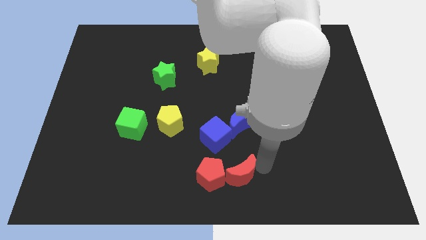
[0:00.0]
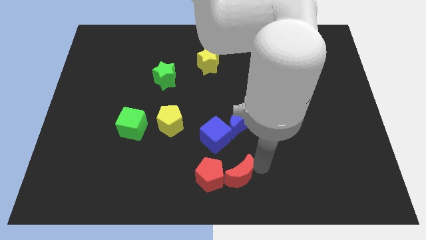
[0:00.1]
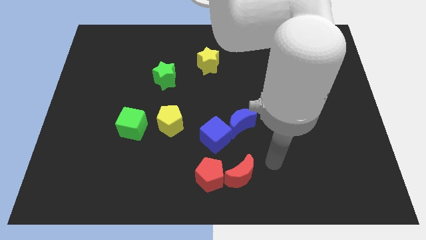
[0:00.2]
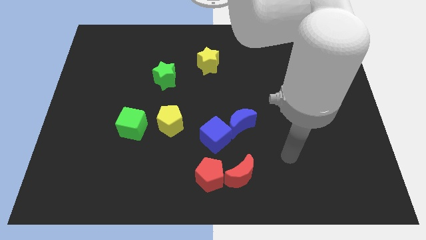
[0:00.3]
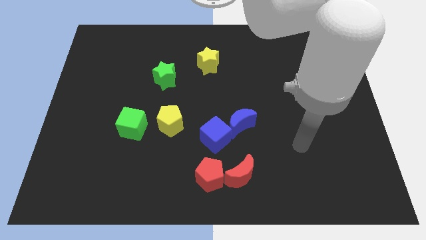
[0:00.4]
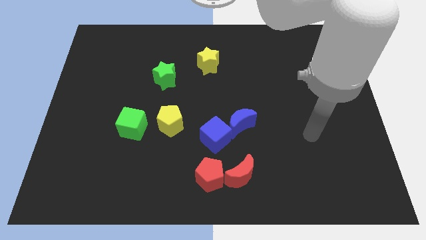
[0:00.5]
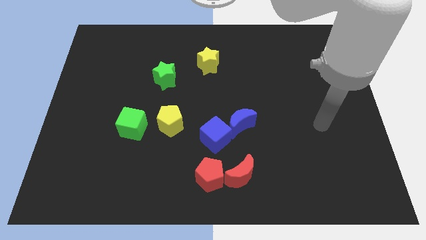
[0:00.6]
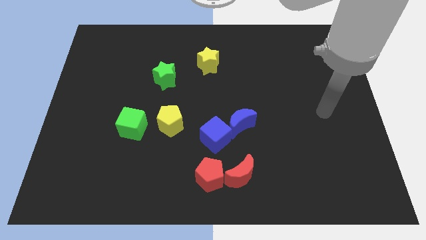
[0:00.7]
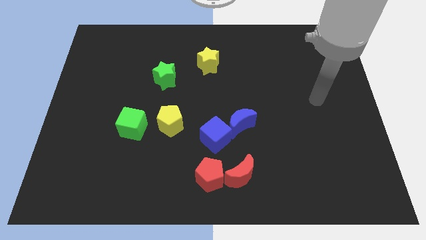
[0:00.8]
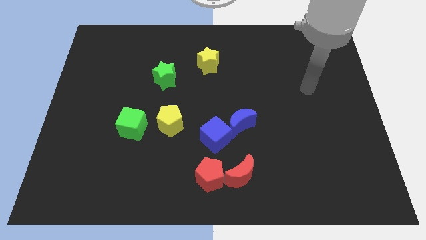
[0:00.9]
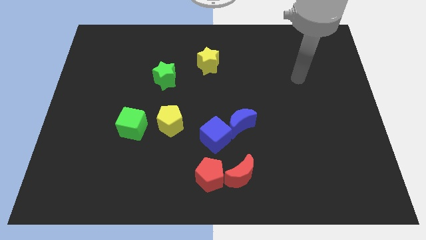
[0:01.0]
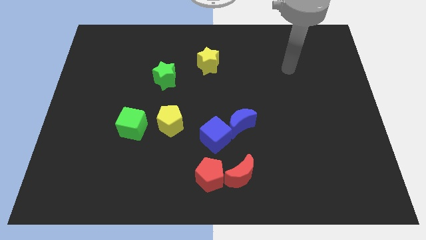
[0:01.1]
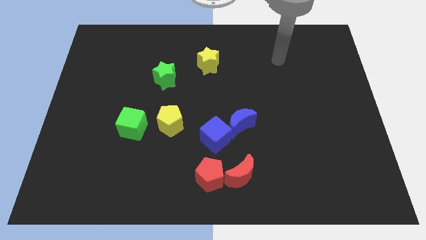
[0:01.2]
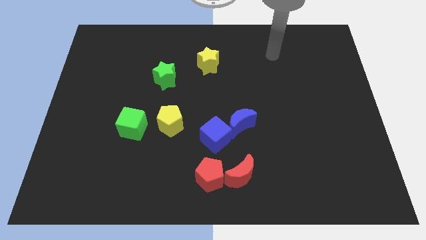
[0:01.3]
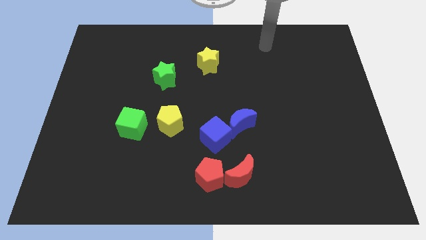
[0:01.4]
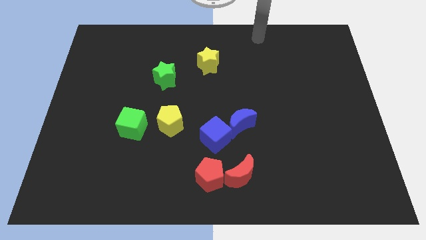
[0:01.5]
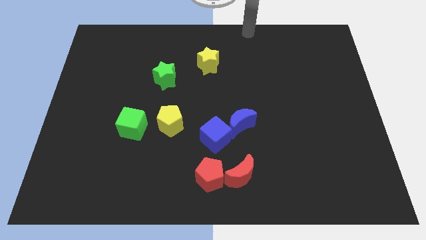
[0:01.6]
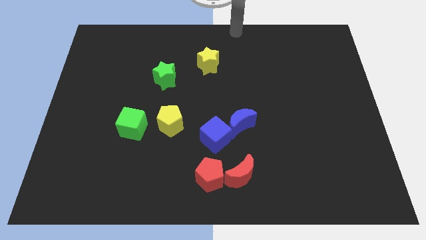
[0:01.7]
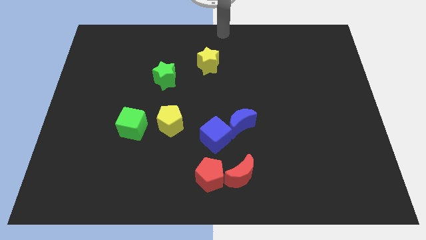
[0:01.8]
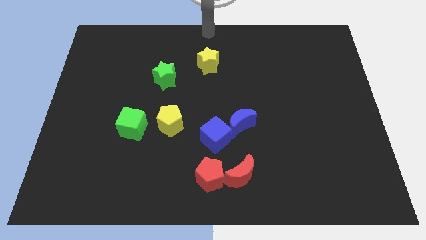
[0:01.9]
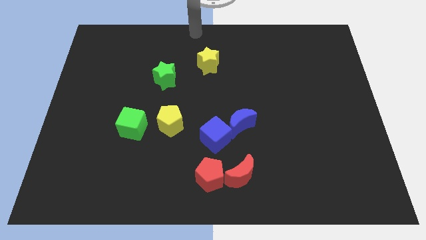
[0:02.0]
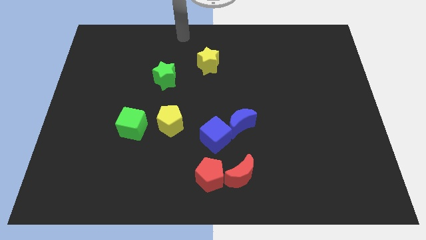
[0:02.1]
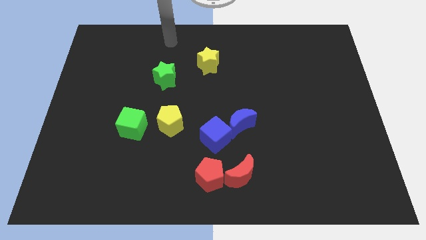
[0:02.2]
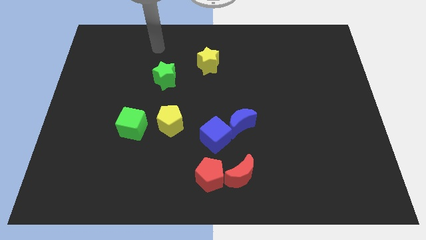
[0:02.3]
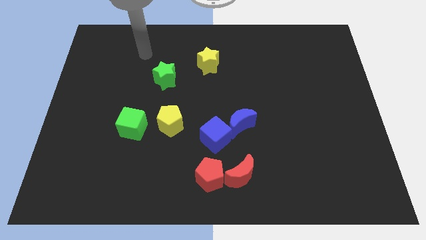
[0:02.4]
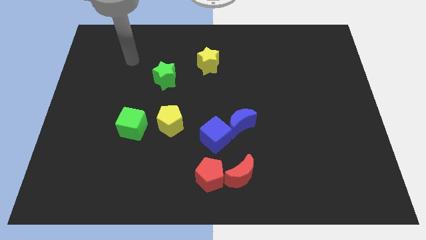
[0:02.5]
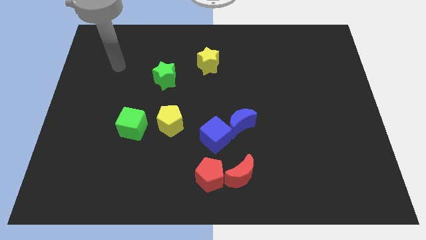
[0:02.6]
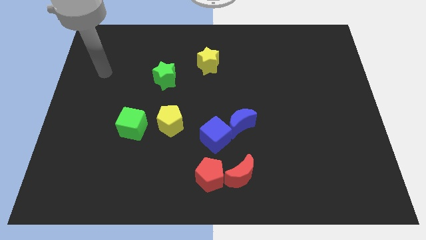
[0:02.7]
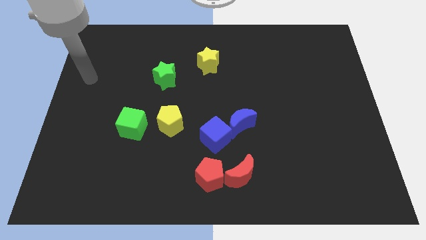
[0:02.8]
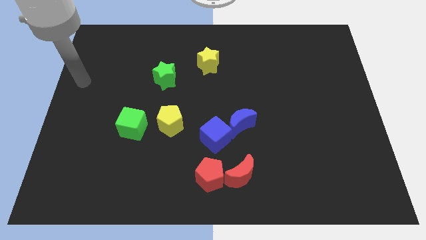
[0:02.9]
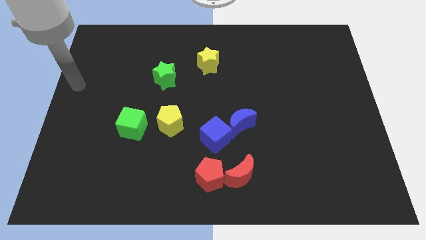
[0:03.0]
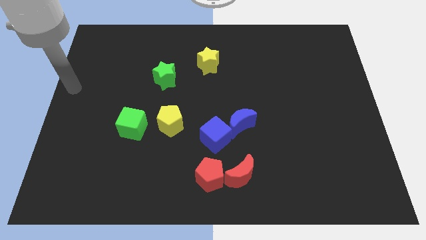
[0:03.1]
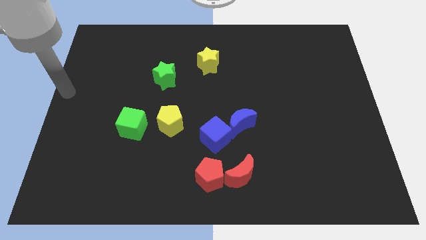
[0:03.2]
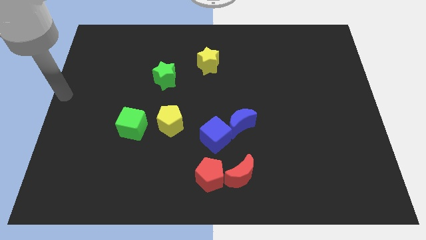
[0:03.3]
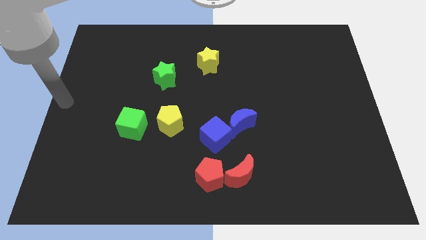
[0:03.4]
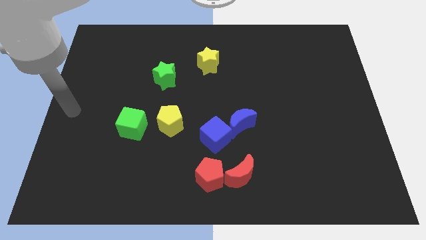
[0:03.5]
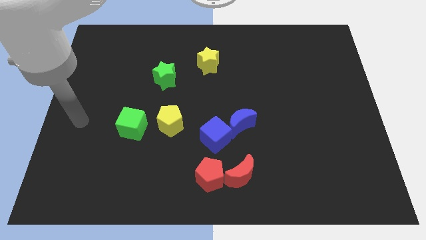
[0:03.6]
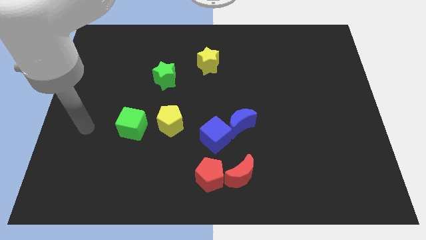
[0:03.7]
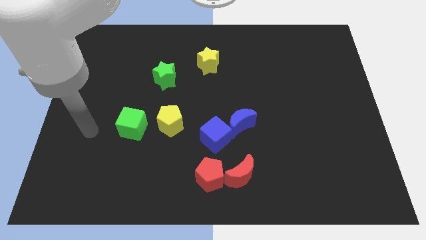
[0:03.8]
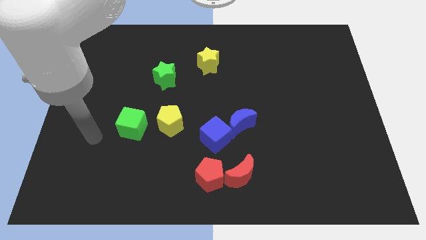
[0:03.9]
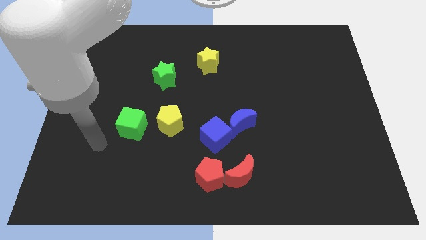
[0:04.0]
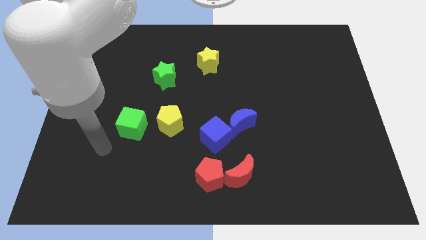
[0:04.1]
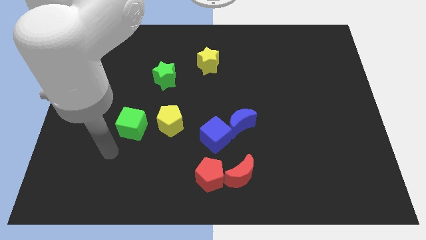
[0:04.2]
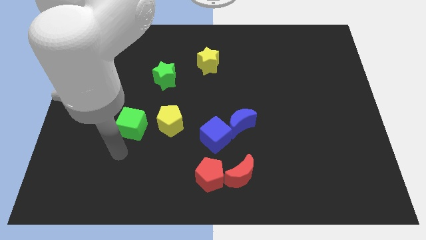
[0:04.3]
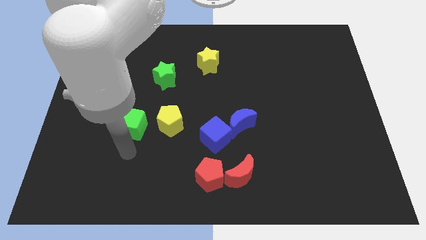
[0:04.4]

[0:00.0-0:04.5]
place the arm below the green cube

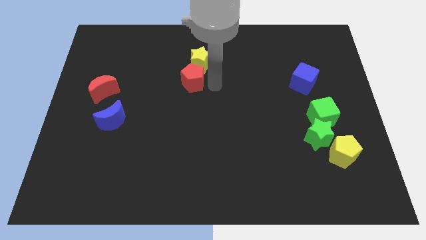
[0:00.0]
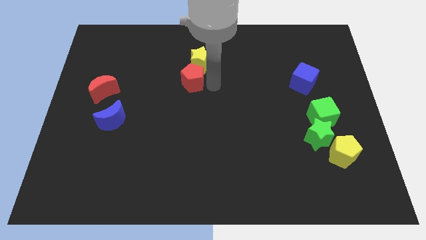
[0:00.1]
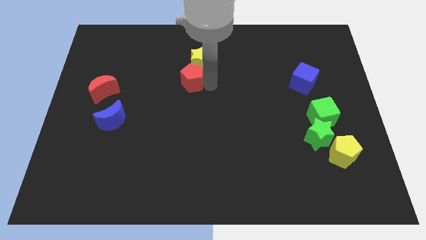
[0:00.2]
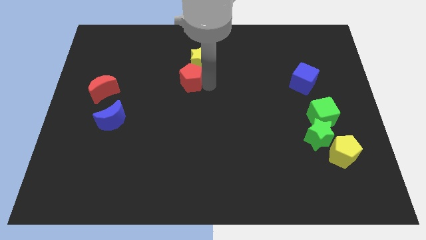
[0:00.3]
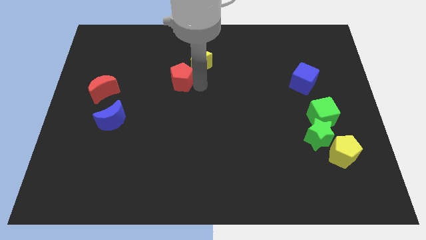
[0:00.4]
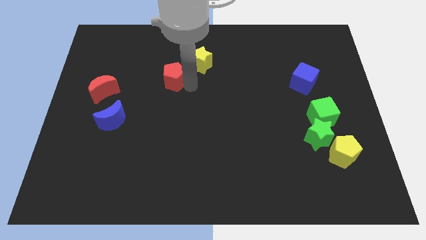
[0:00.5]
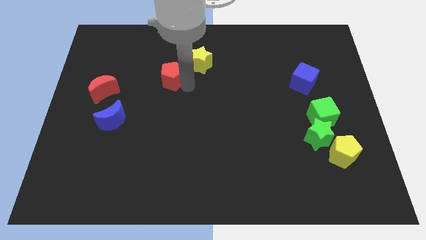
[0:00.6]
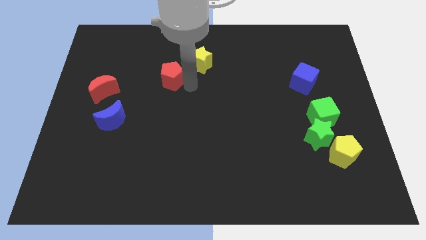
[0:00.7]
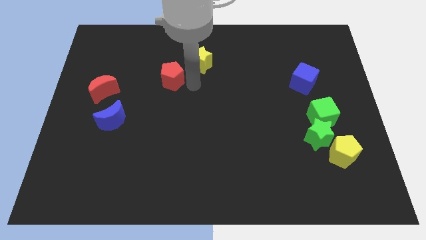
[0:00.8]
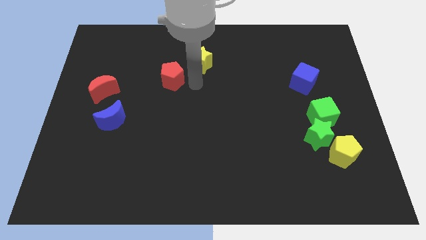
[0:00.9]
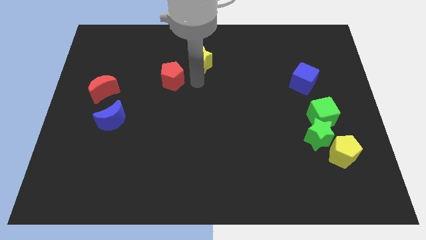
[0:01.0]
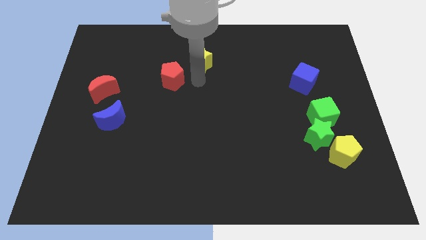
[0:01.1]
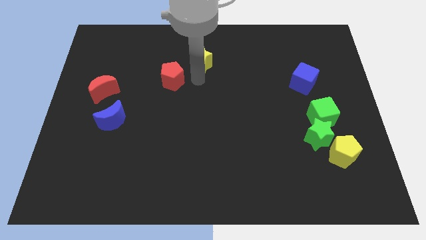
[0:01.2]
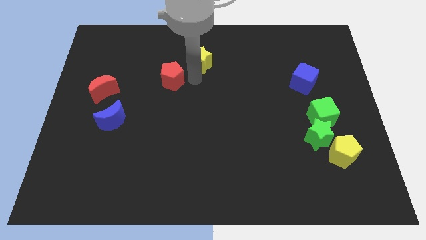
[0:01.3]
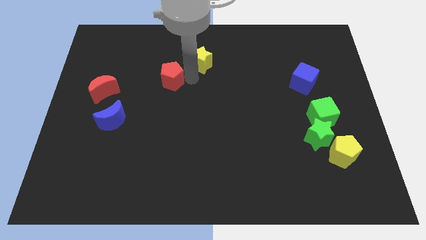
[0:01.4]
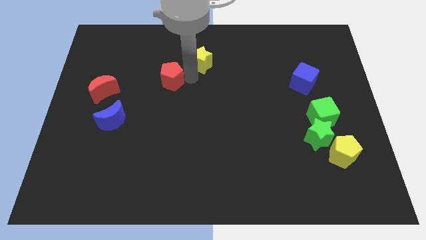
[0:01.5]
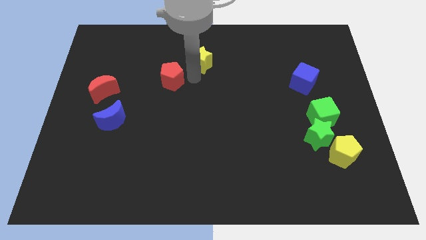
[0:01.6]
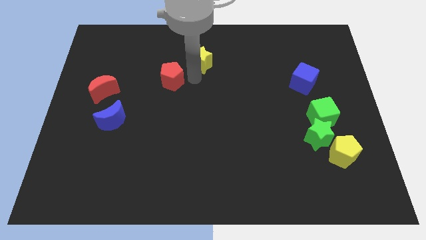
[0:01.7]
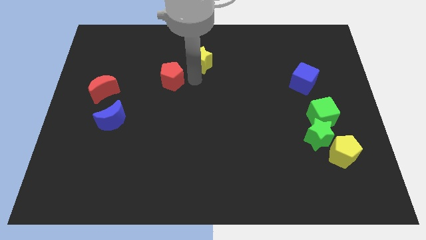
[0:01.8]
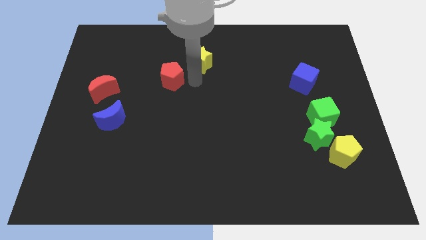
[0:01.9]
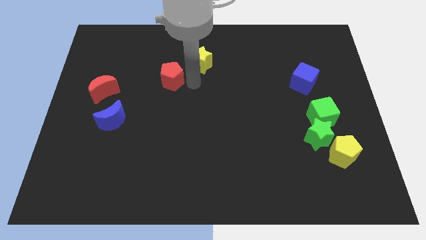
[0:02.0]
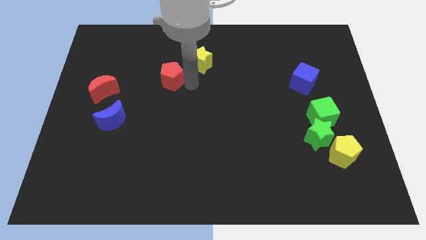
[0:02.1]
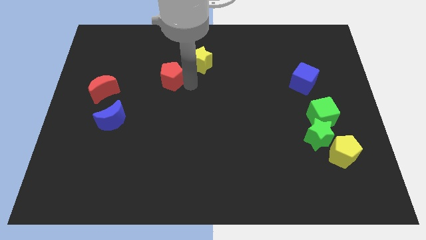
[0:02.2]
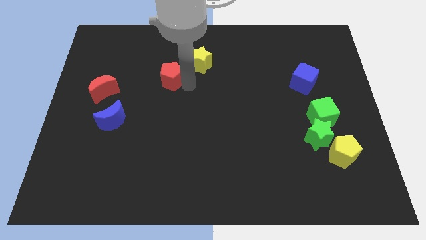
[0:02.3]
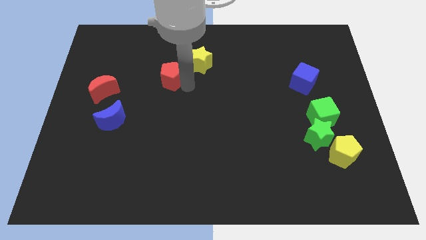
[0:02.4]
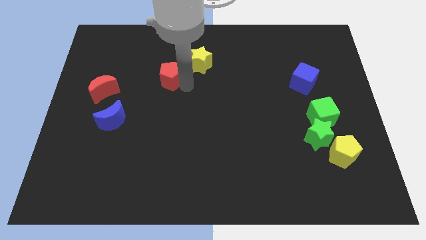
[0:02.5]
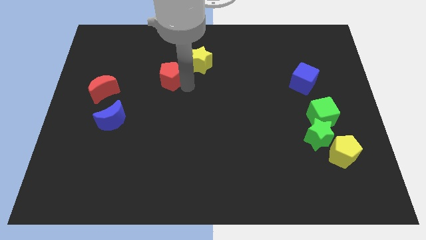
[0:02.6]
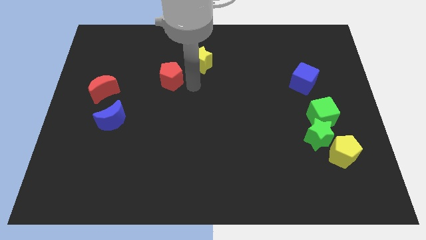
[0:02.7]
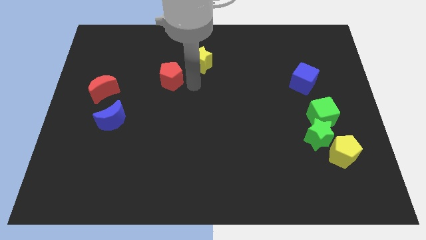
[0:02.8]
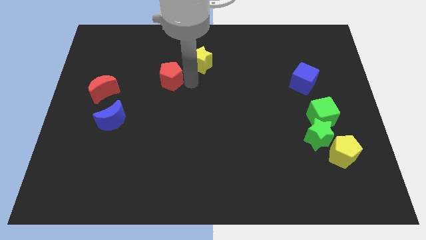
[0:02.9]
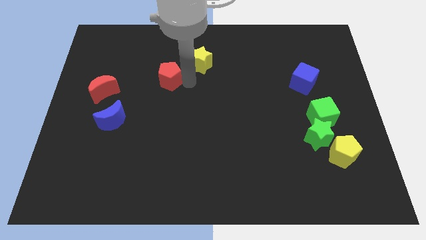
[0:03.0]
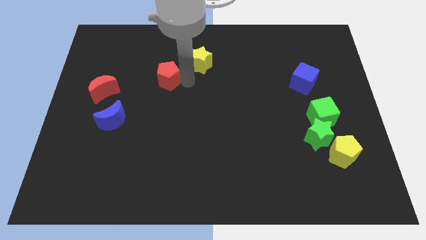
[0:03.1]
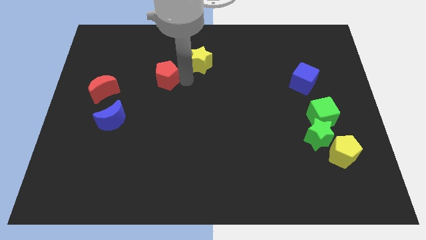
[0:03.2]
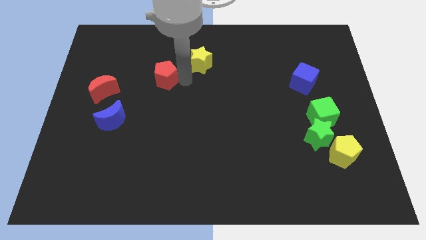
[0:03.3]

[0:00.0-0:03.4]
place the red pentagon in between yellow star and red moon

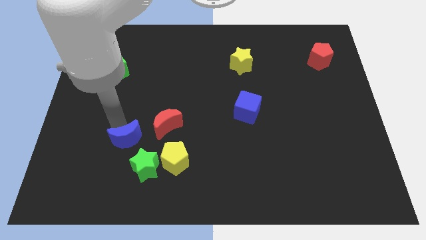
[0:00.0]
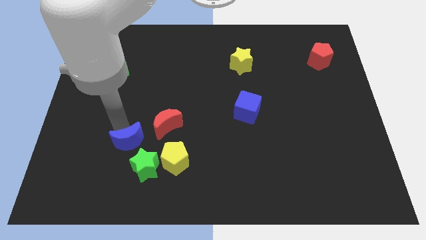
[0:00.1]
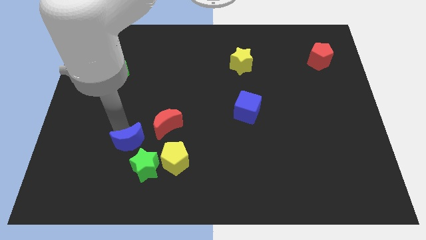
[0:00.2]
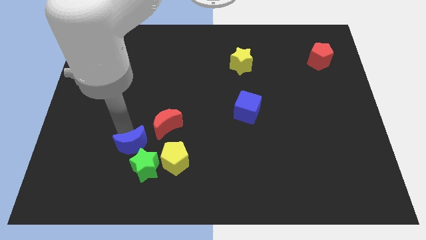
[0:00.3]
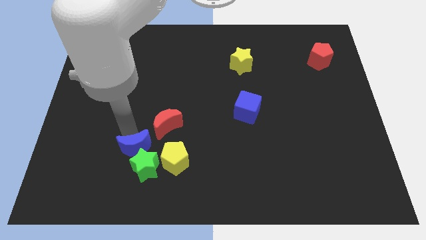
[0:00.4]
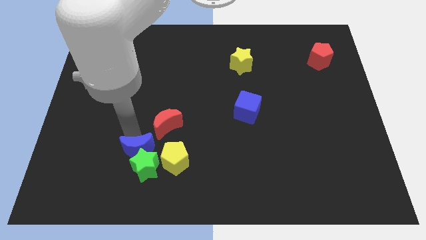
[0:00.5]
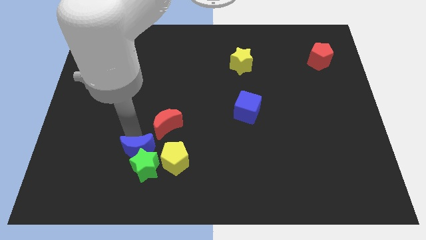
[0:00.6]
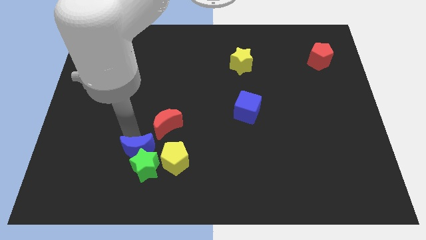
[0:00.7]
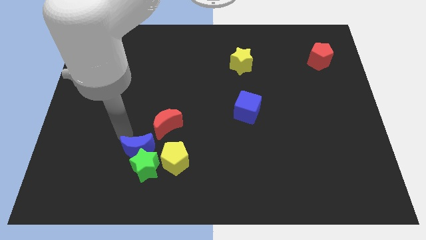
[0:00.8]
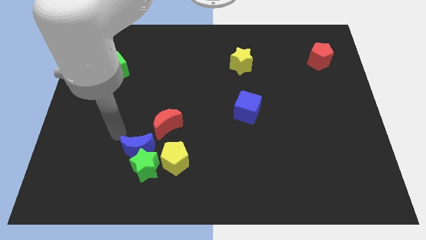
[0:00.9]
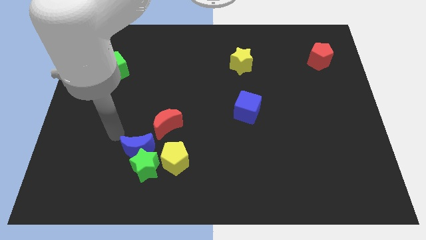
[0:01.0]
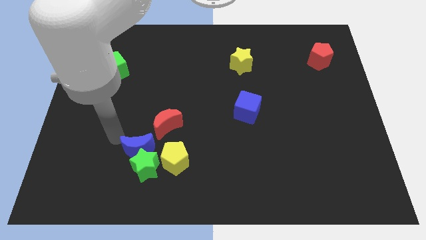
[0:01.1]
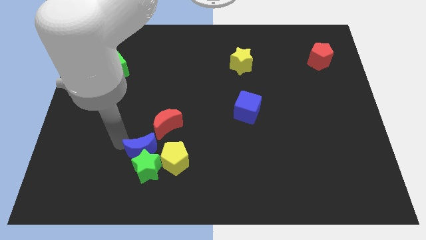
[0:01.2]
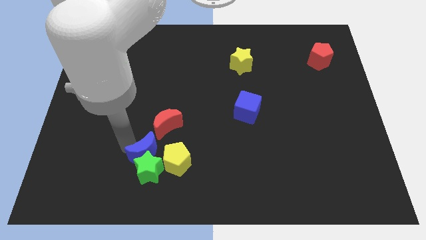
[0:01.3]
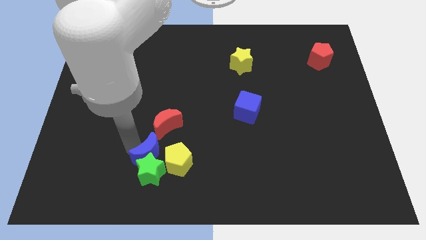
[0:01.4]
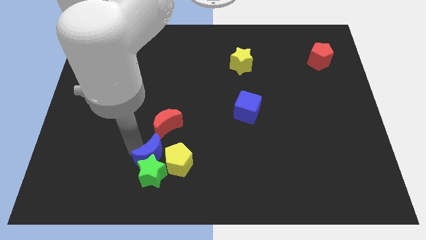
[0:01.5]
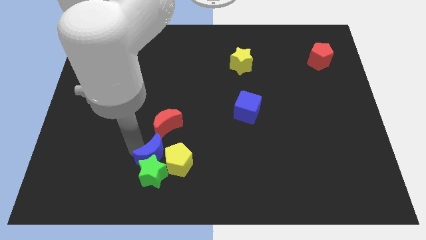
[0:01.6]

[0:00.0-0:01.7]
push the blue moon into the green star
